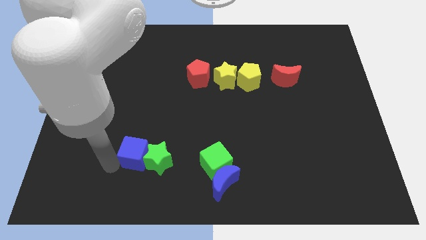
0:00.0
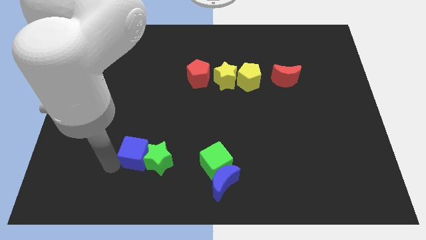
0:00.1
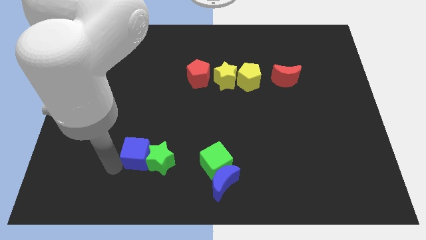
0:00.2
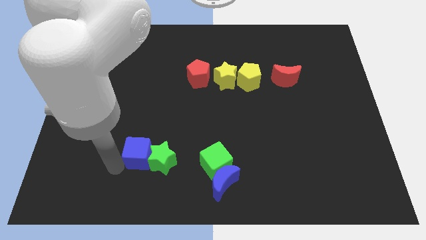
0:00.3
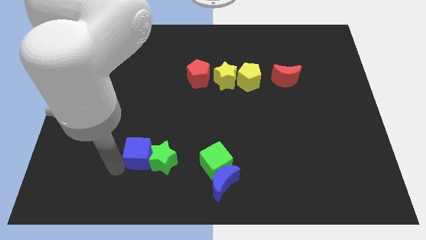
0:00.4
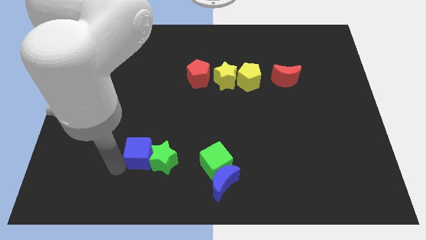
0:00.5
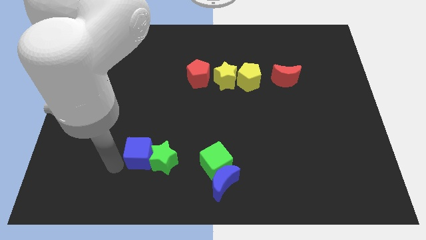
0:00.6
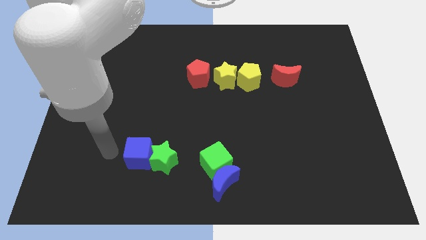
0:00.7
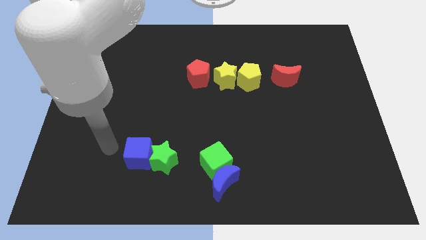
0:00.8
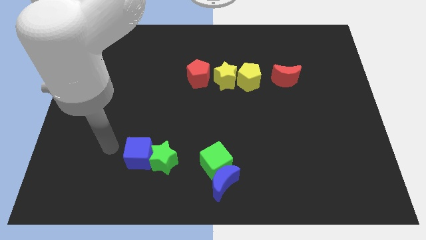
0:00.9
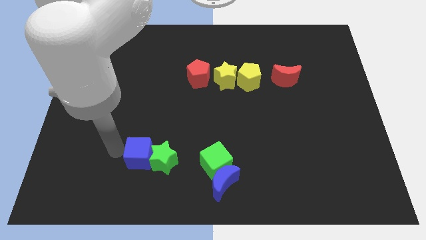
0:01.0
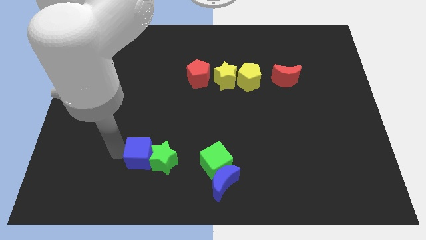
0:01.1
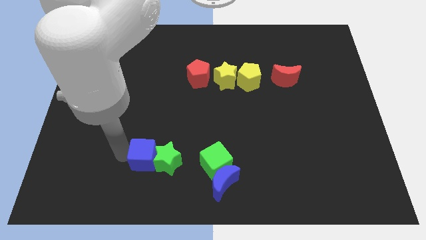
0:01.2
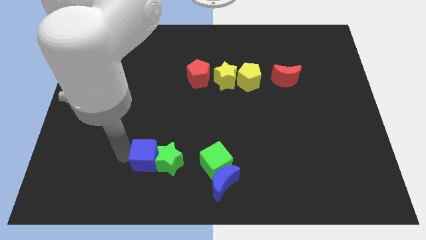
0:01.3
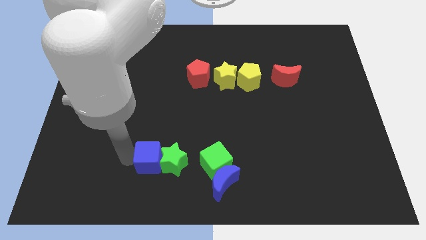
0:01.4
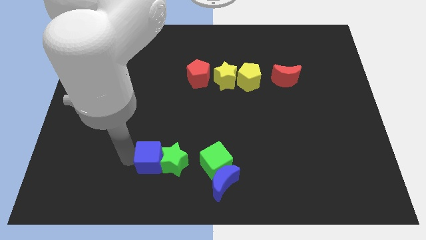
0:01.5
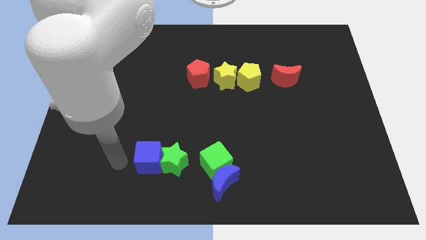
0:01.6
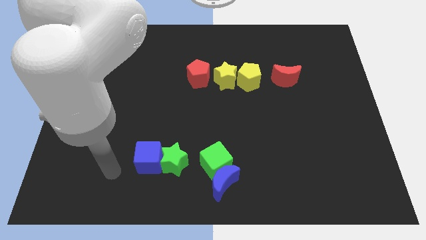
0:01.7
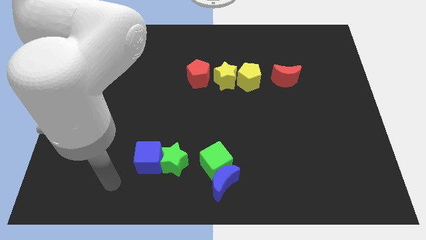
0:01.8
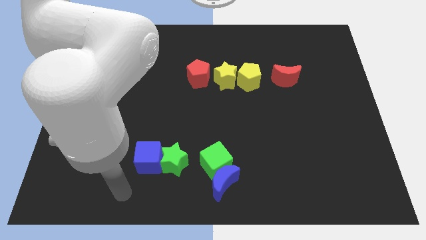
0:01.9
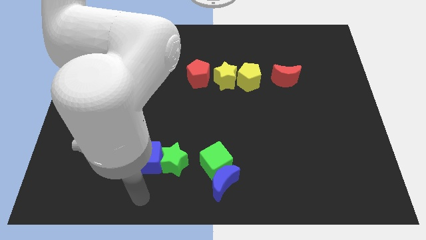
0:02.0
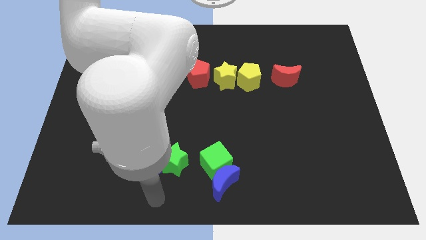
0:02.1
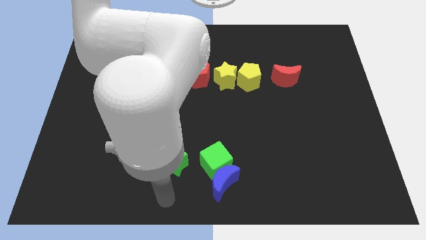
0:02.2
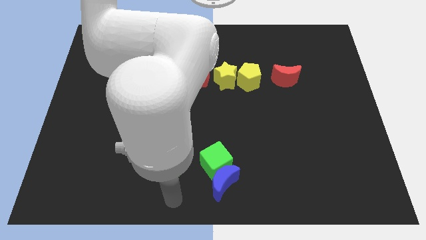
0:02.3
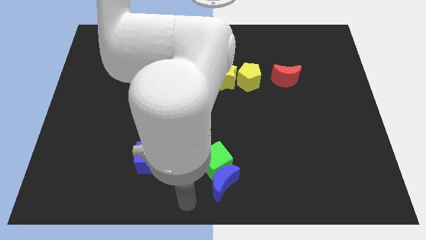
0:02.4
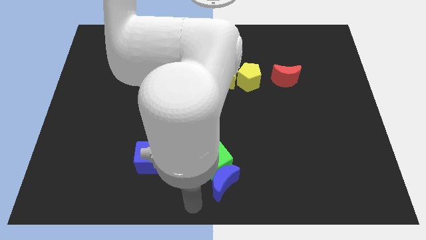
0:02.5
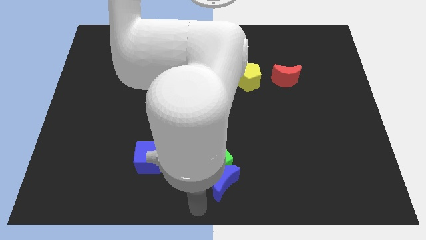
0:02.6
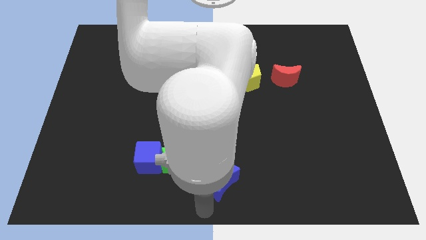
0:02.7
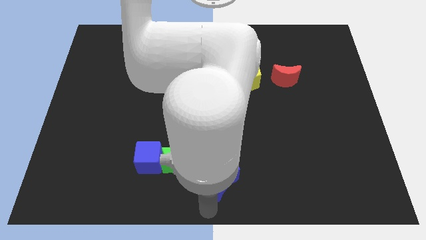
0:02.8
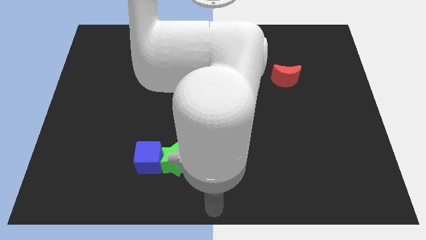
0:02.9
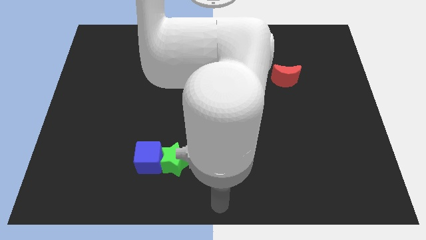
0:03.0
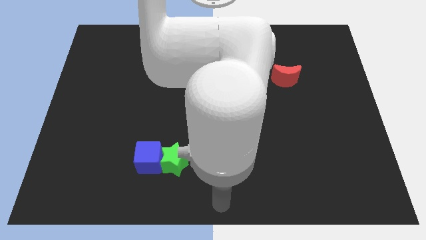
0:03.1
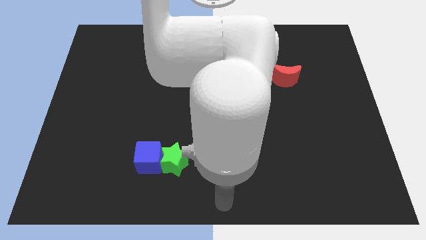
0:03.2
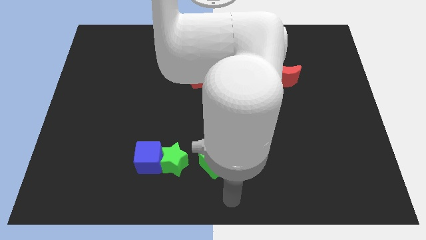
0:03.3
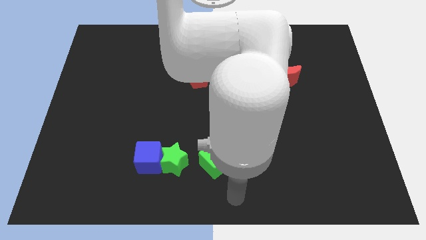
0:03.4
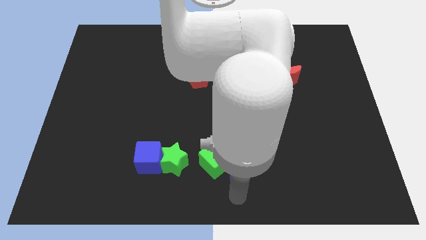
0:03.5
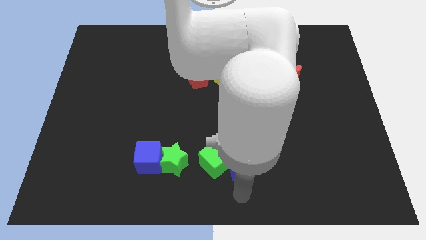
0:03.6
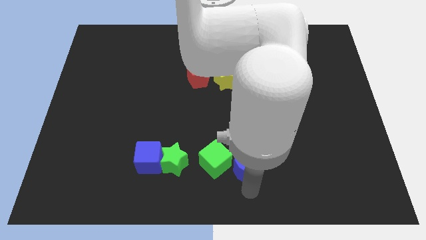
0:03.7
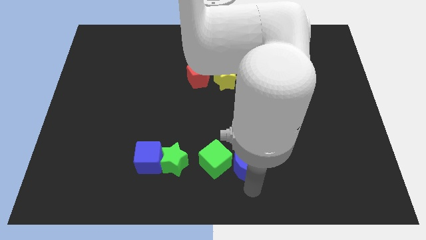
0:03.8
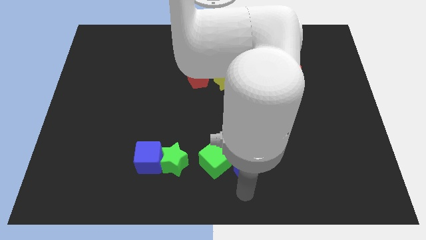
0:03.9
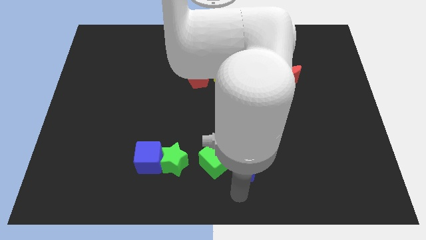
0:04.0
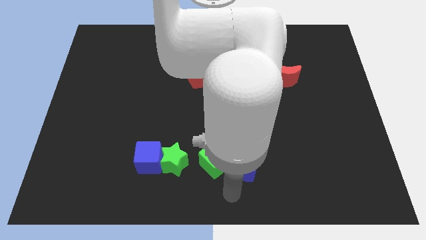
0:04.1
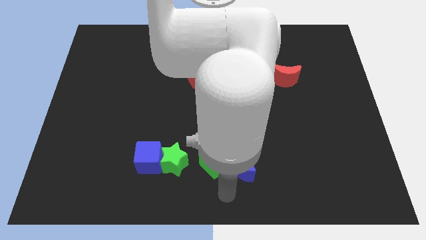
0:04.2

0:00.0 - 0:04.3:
place green star and blue cube parallel left to green cube

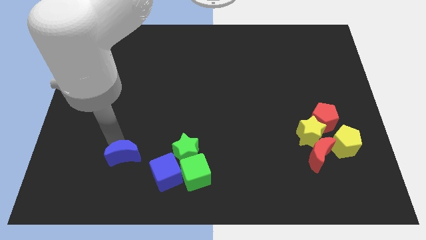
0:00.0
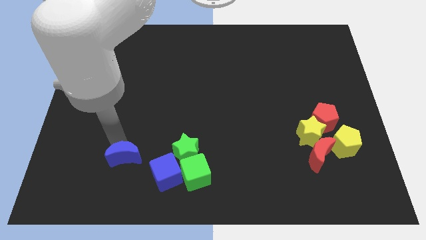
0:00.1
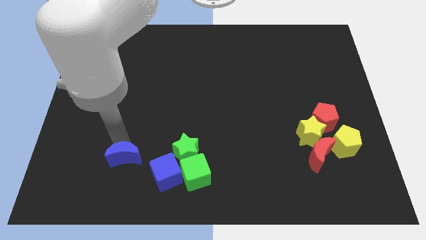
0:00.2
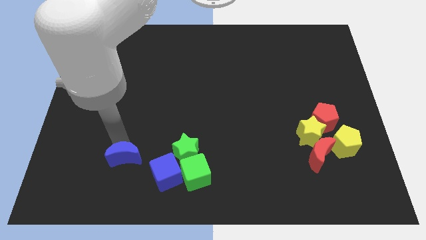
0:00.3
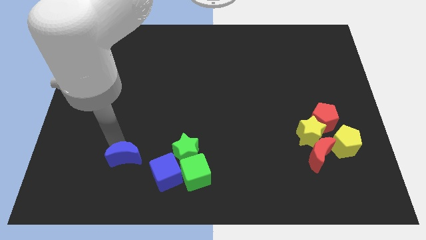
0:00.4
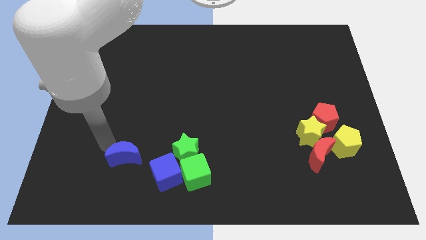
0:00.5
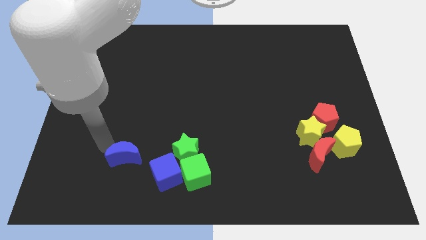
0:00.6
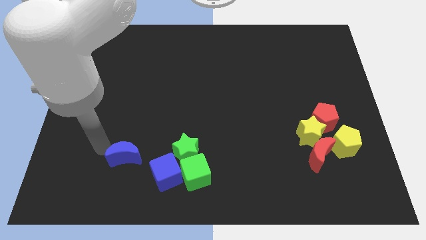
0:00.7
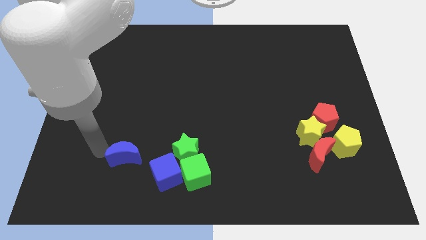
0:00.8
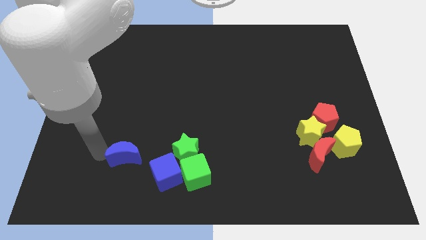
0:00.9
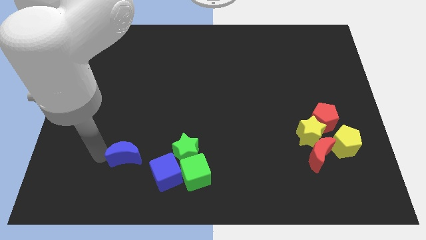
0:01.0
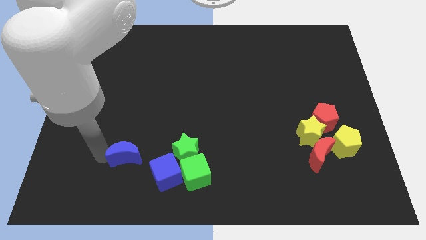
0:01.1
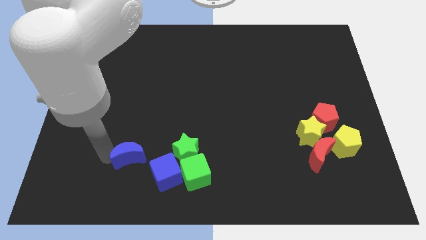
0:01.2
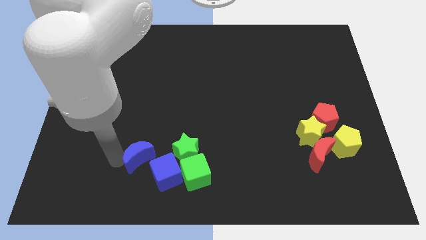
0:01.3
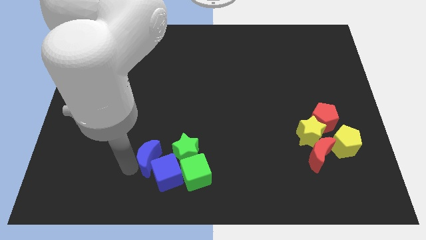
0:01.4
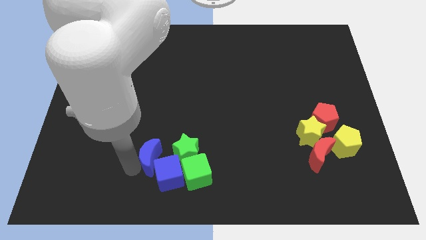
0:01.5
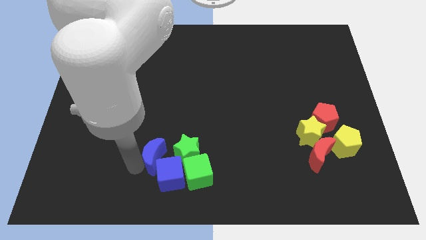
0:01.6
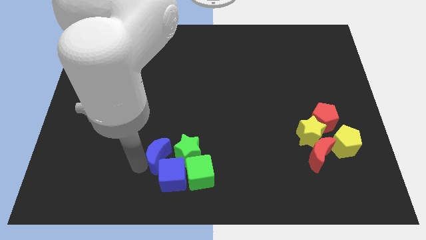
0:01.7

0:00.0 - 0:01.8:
push the blue moon into the blue cube

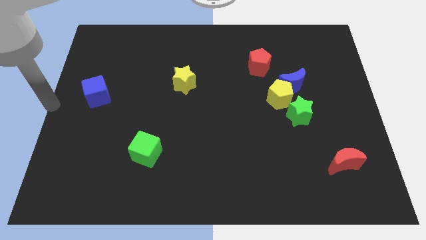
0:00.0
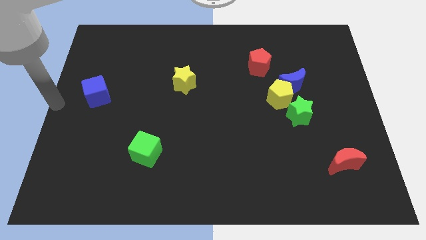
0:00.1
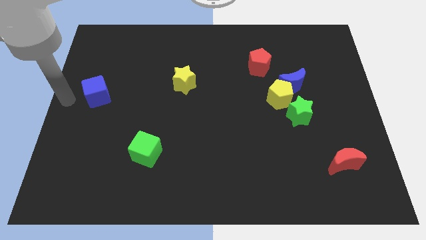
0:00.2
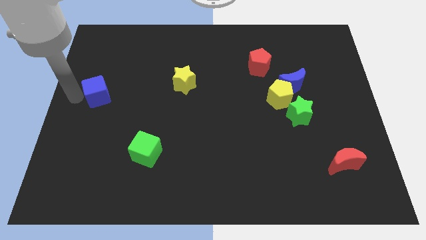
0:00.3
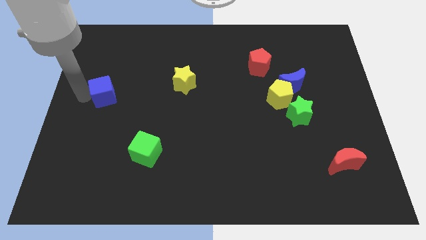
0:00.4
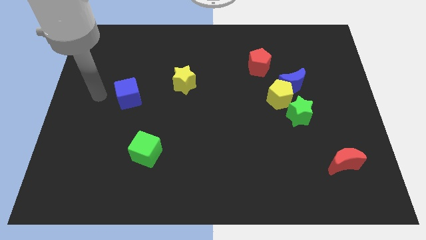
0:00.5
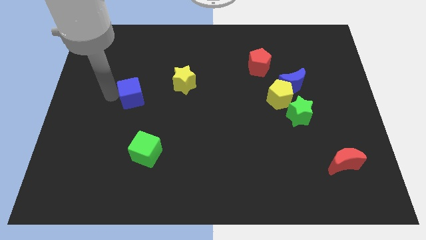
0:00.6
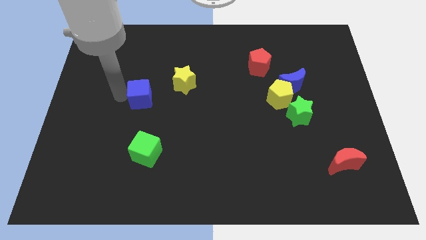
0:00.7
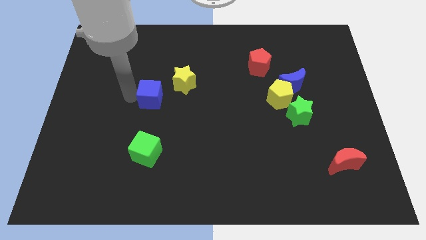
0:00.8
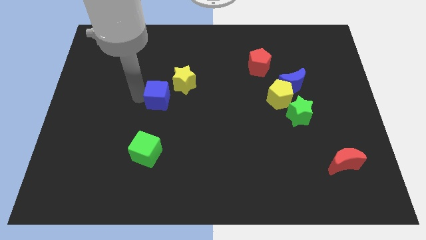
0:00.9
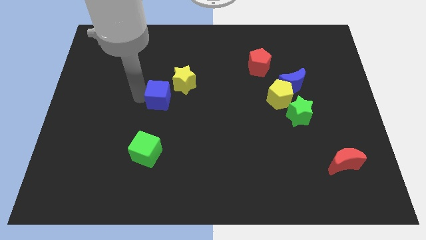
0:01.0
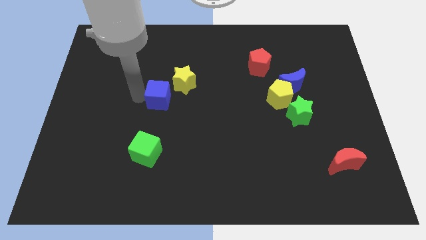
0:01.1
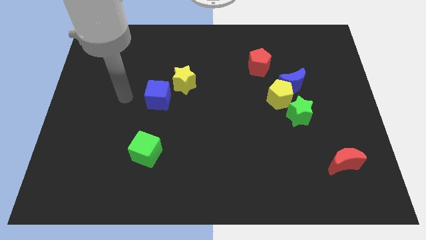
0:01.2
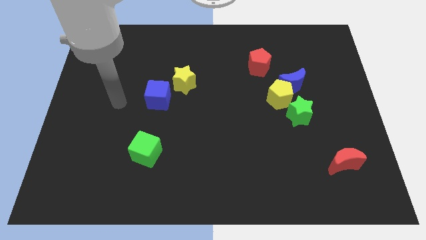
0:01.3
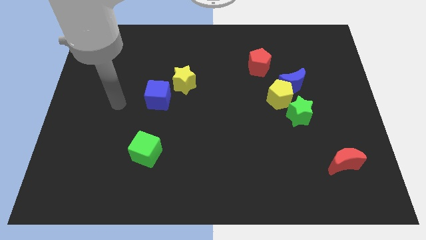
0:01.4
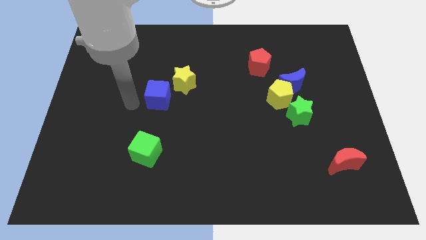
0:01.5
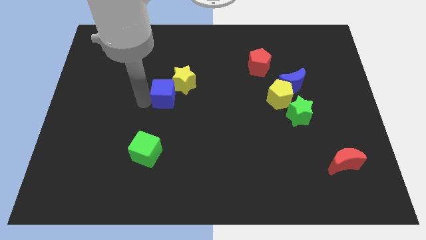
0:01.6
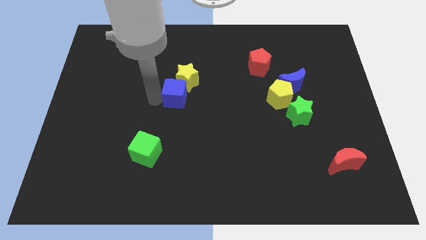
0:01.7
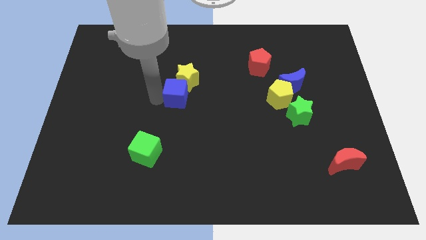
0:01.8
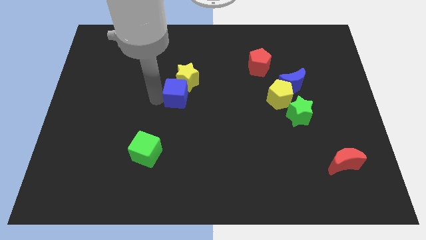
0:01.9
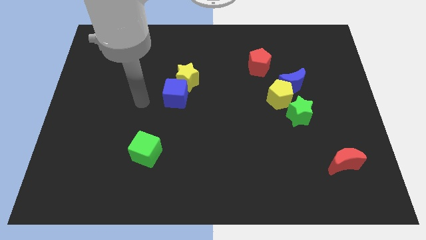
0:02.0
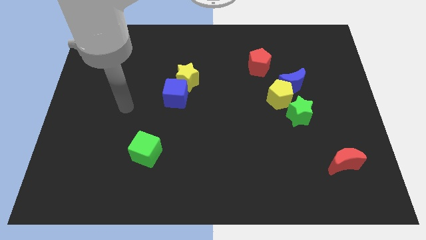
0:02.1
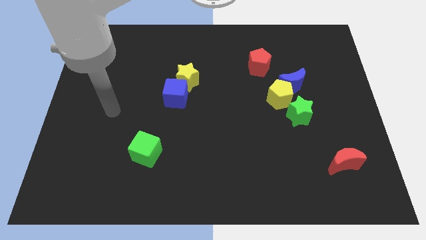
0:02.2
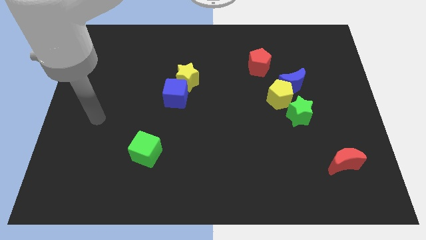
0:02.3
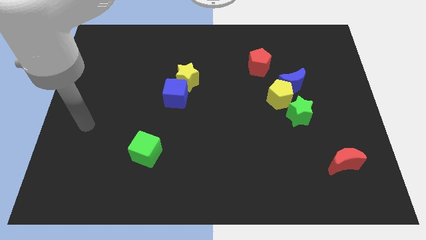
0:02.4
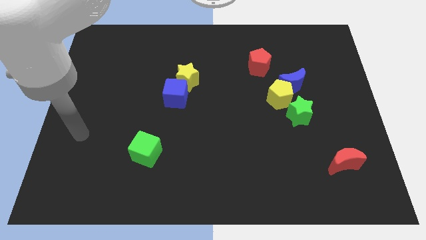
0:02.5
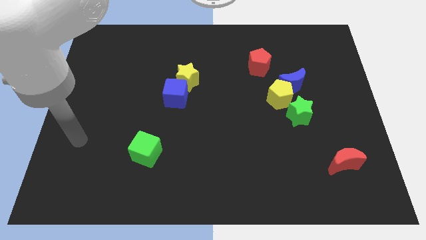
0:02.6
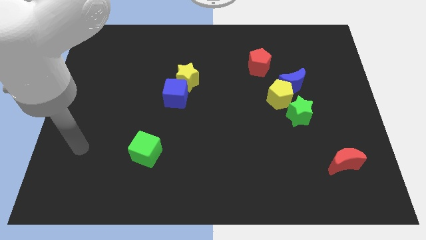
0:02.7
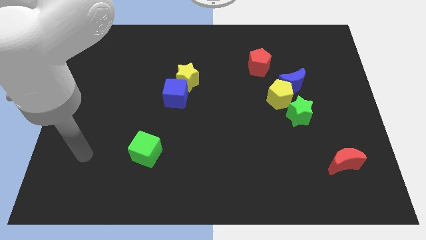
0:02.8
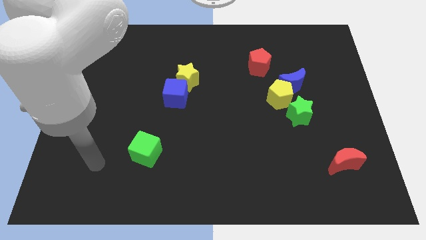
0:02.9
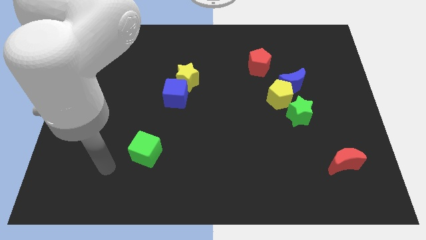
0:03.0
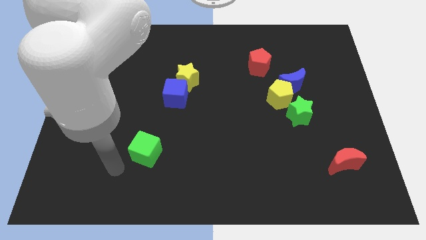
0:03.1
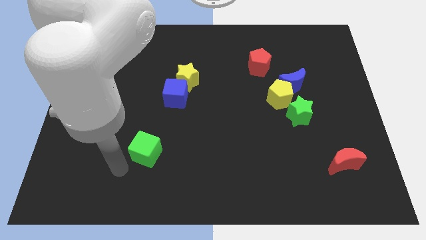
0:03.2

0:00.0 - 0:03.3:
push the blue cube into the yellow star
